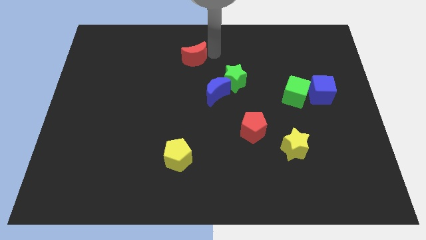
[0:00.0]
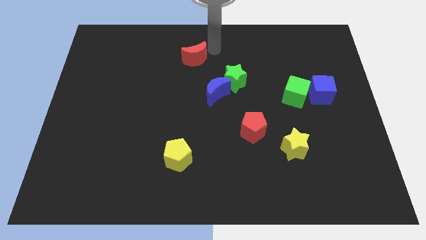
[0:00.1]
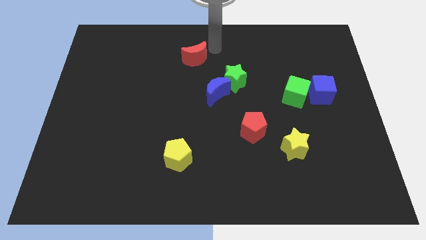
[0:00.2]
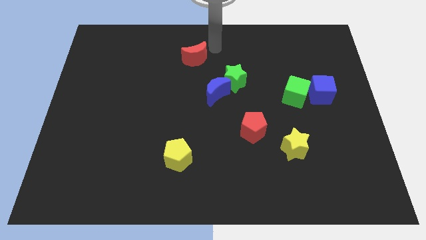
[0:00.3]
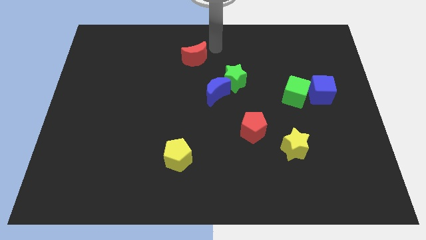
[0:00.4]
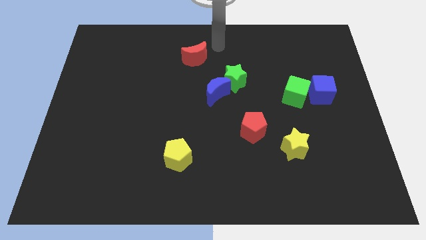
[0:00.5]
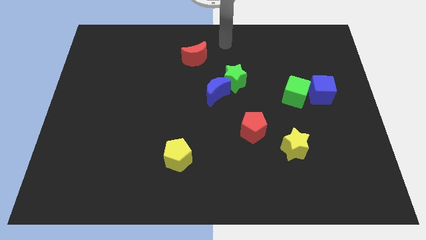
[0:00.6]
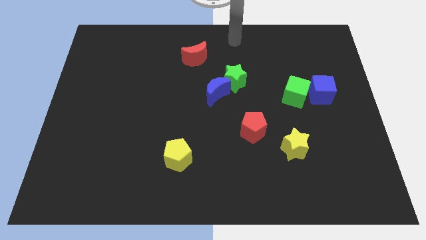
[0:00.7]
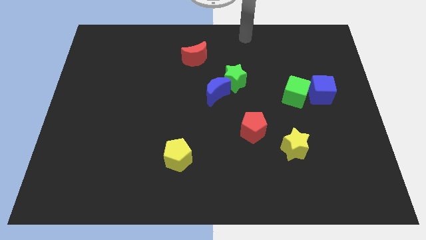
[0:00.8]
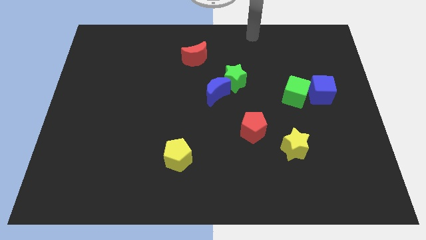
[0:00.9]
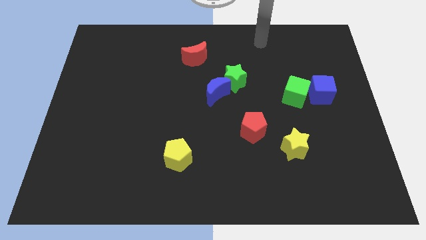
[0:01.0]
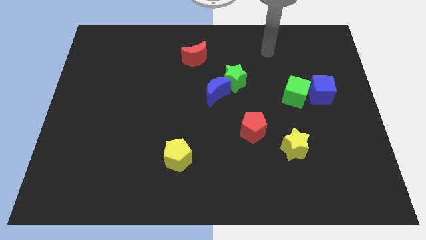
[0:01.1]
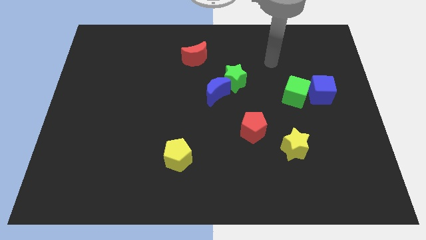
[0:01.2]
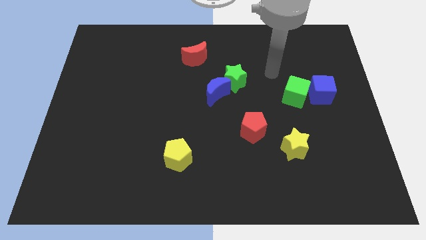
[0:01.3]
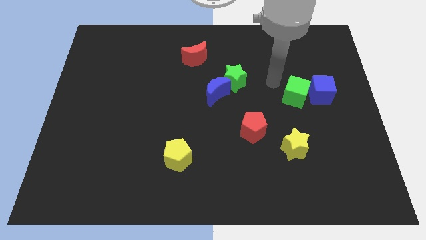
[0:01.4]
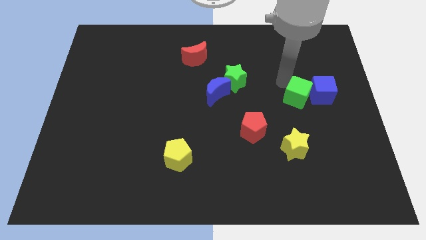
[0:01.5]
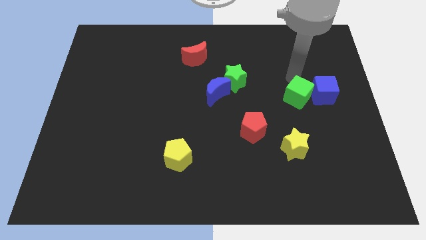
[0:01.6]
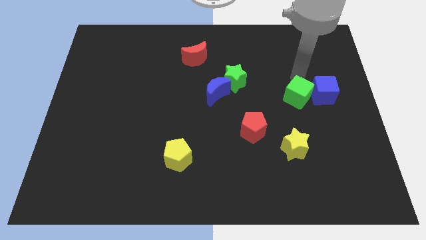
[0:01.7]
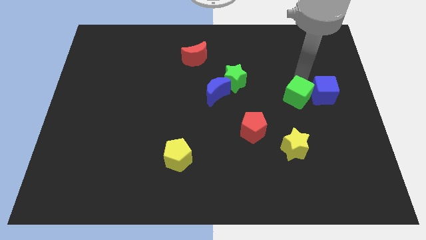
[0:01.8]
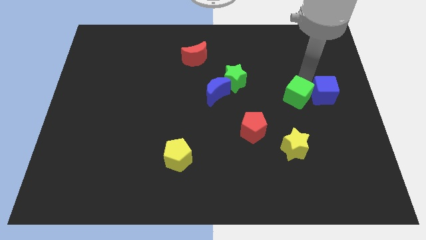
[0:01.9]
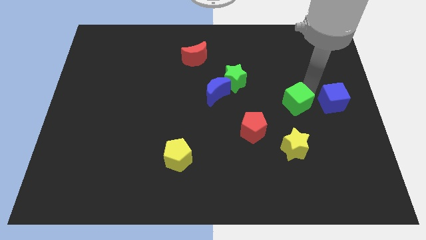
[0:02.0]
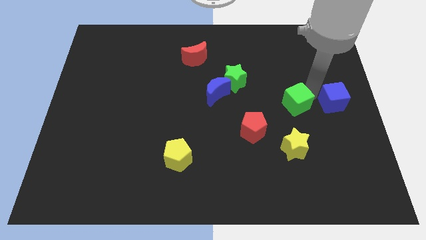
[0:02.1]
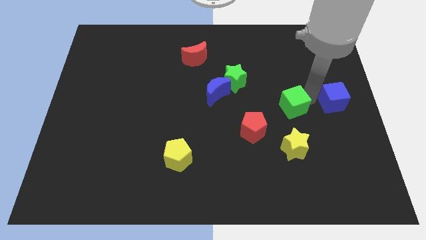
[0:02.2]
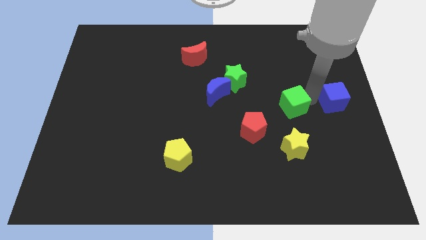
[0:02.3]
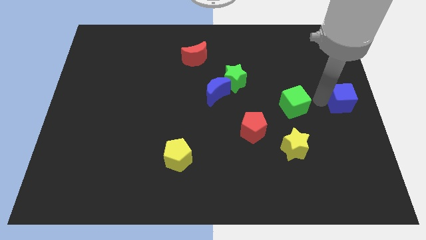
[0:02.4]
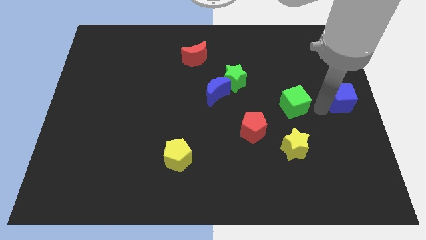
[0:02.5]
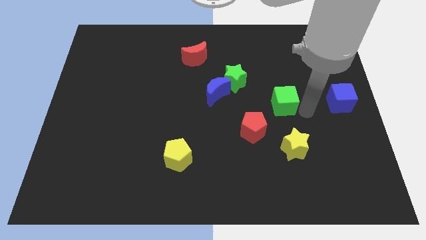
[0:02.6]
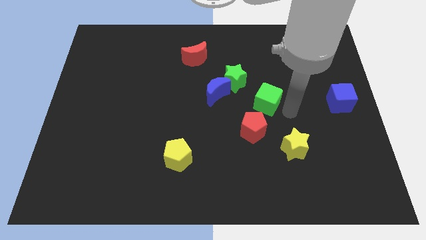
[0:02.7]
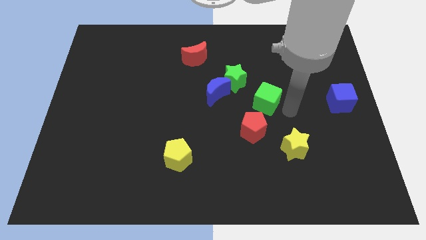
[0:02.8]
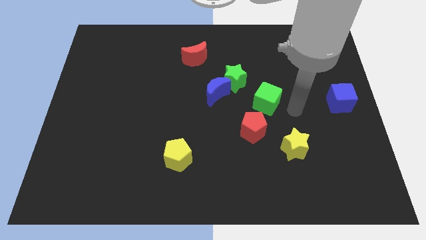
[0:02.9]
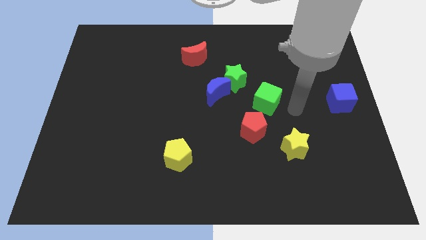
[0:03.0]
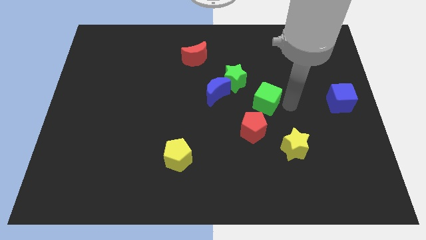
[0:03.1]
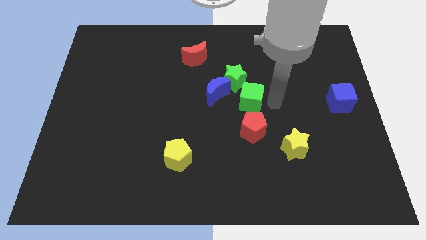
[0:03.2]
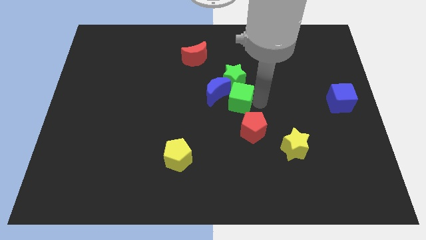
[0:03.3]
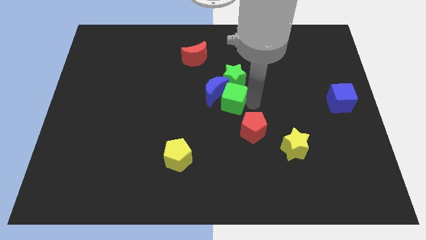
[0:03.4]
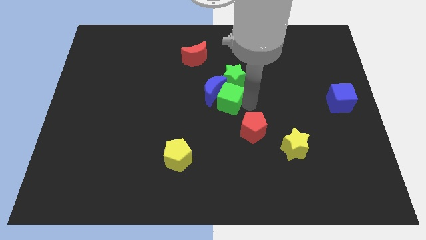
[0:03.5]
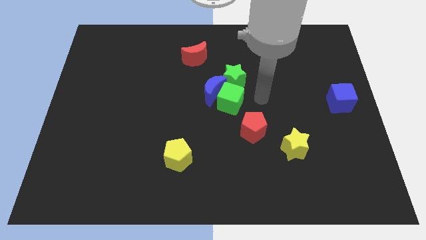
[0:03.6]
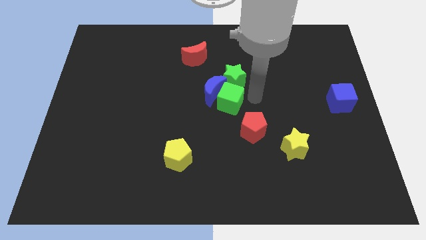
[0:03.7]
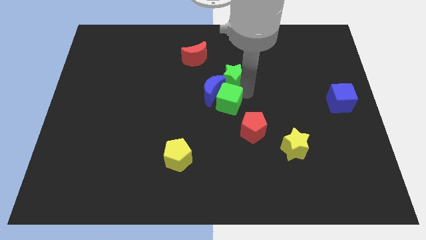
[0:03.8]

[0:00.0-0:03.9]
push the green cube into the blue crescent

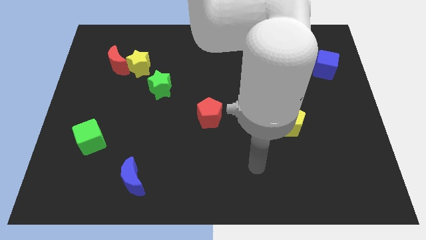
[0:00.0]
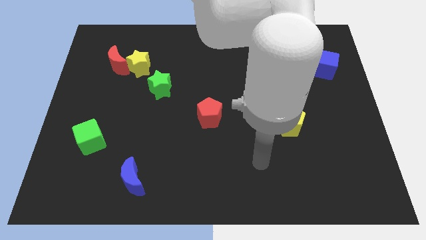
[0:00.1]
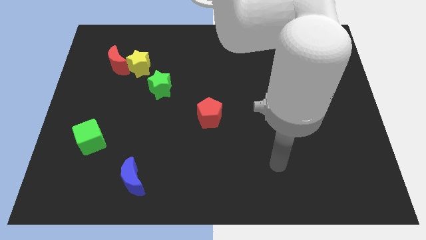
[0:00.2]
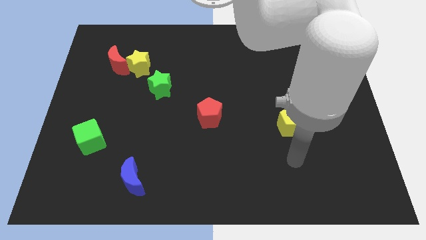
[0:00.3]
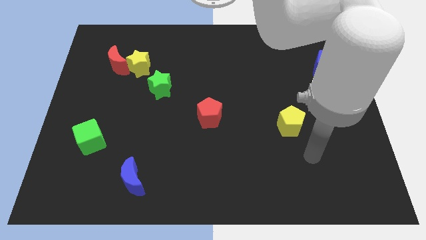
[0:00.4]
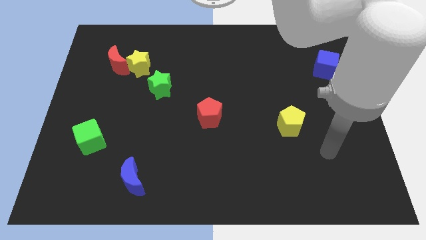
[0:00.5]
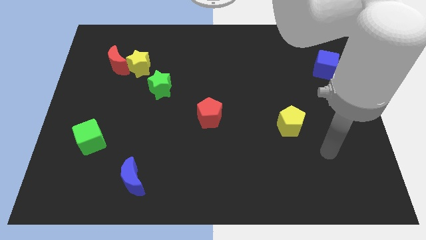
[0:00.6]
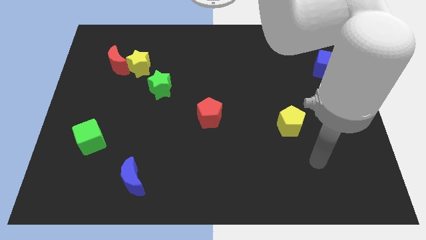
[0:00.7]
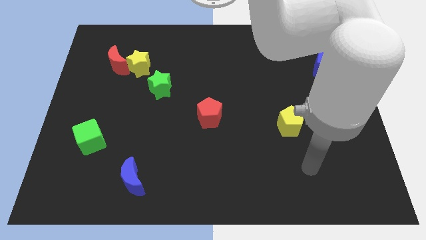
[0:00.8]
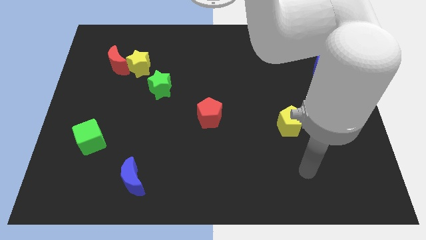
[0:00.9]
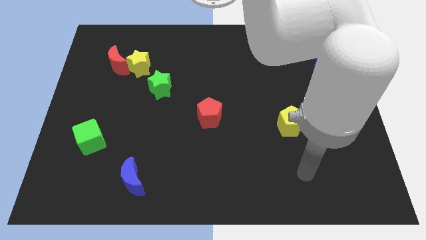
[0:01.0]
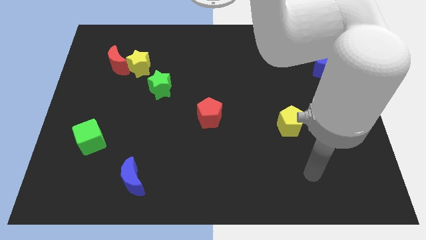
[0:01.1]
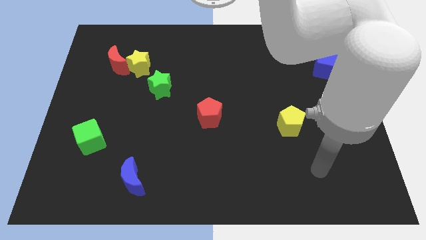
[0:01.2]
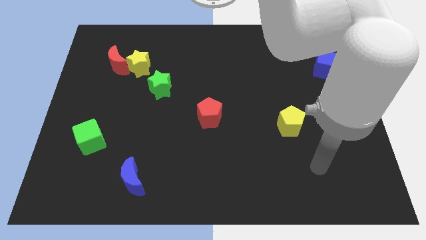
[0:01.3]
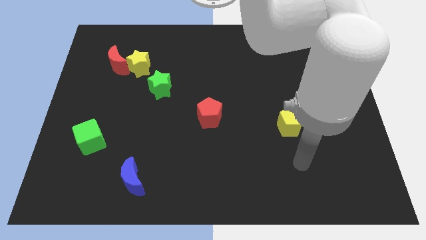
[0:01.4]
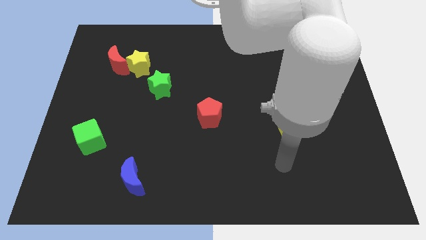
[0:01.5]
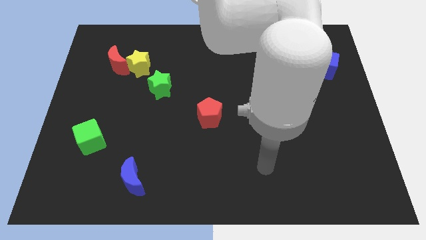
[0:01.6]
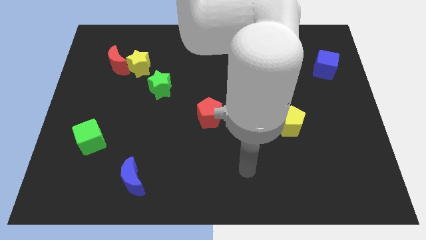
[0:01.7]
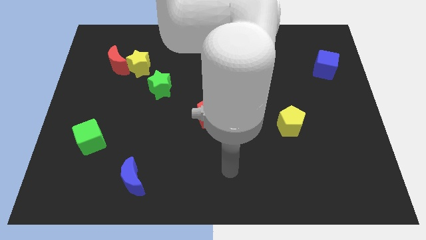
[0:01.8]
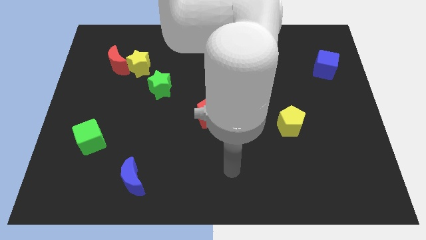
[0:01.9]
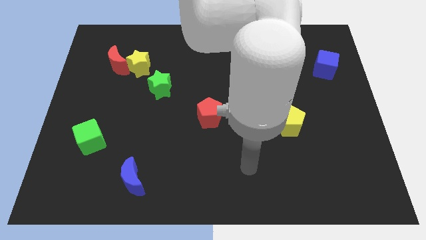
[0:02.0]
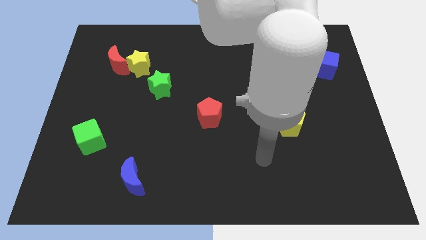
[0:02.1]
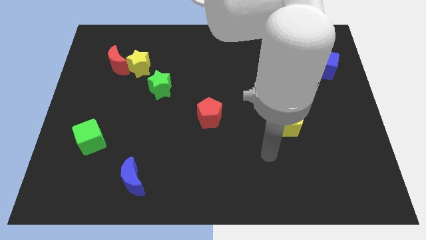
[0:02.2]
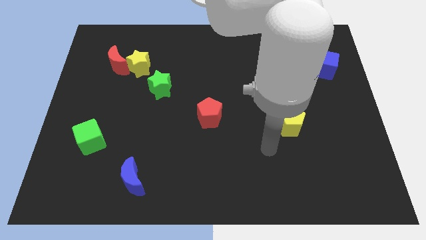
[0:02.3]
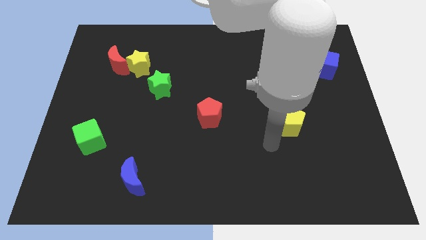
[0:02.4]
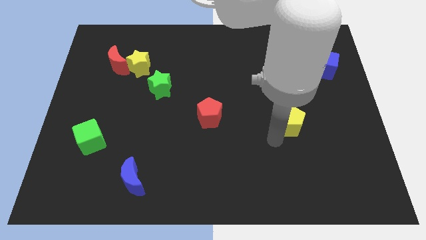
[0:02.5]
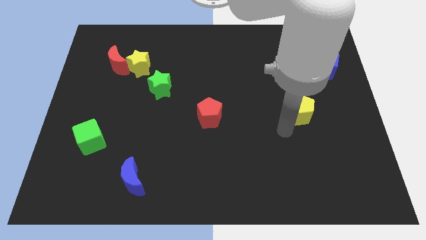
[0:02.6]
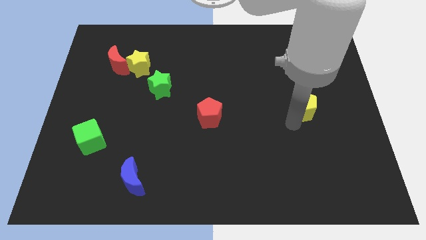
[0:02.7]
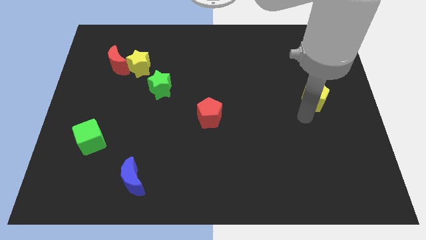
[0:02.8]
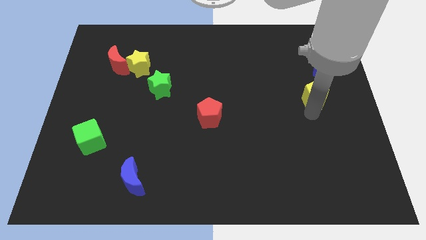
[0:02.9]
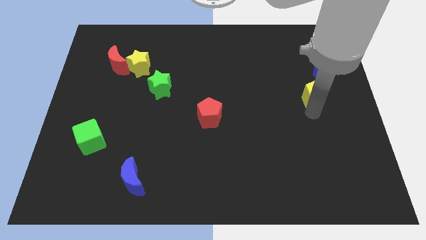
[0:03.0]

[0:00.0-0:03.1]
slide the yellow pentagon towards the bottom side of the blue cube

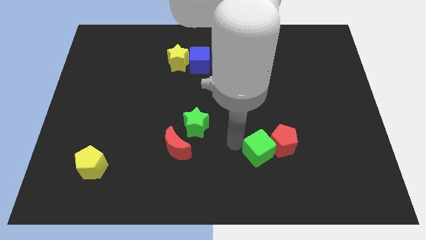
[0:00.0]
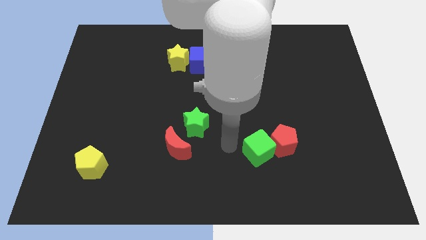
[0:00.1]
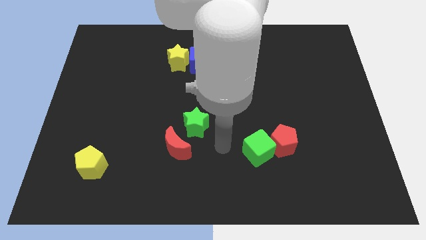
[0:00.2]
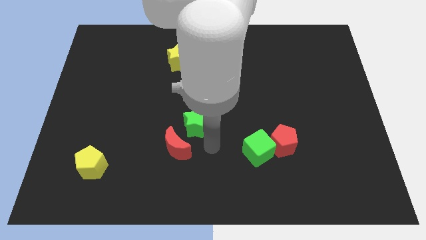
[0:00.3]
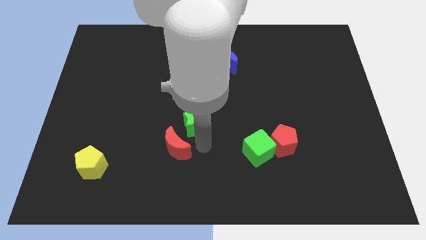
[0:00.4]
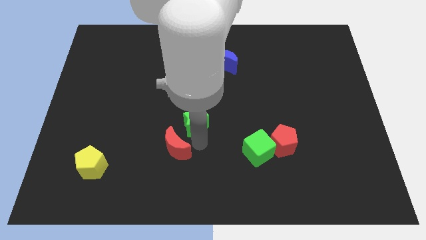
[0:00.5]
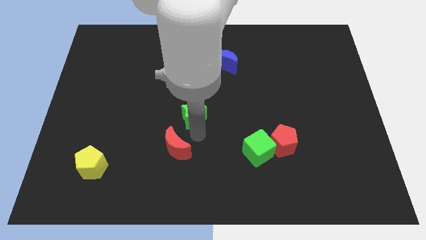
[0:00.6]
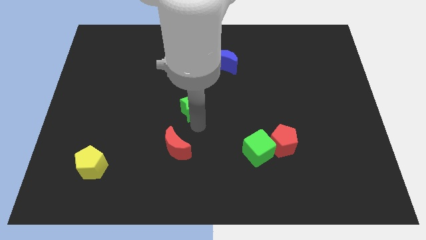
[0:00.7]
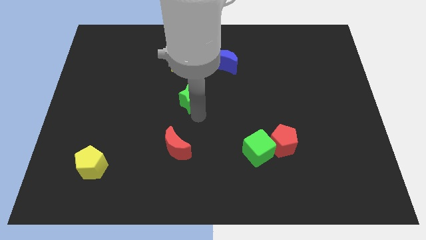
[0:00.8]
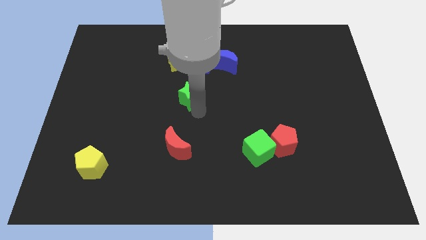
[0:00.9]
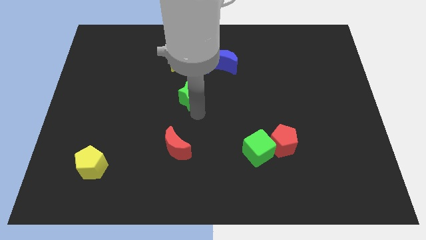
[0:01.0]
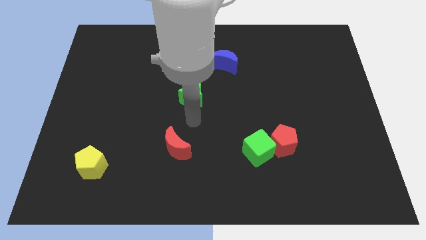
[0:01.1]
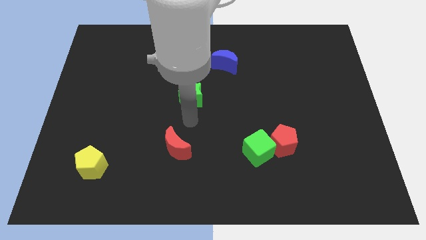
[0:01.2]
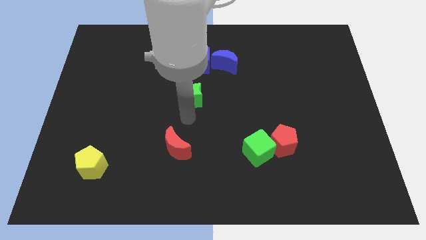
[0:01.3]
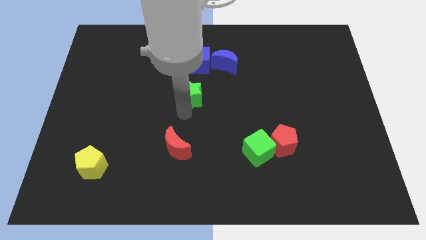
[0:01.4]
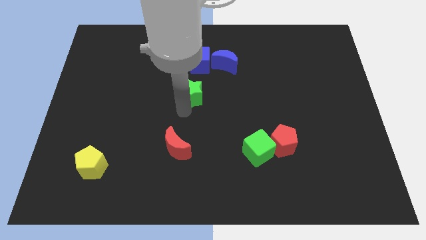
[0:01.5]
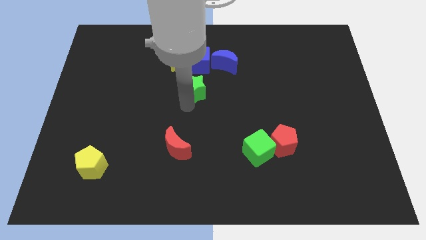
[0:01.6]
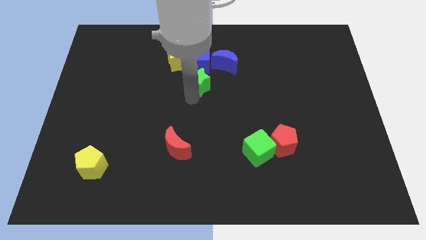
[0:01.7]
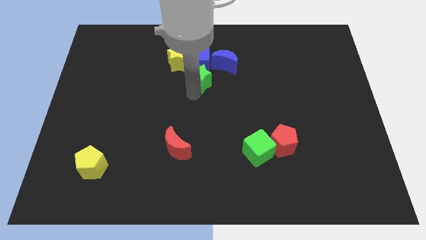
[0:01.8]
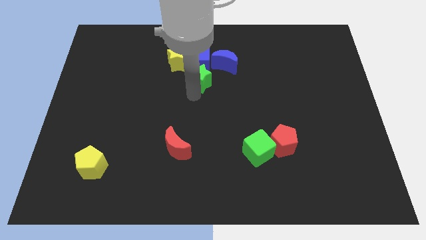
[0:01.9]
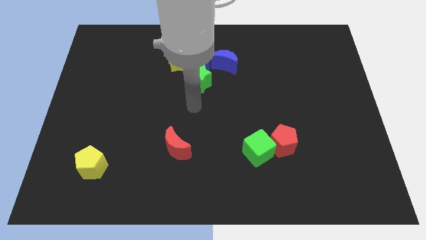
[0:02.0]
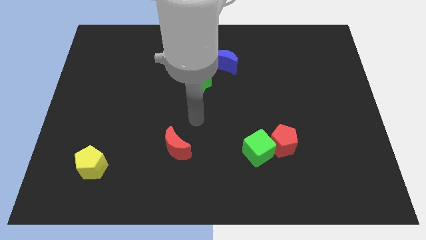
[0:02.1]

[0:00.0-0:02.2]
slide the green star below the blue cube
